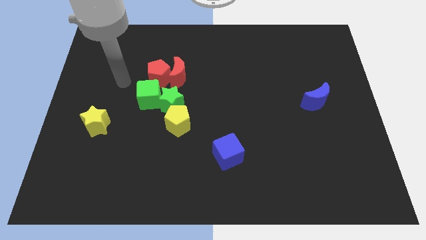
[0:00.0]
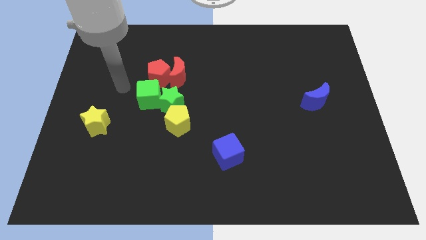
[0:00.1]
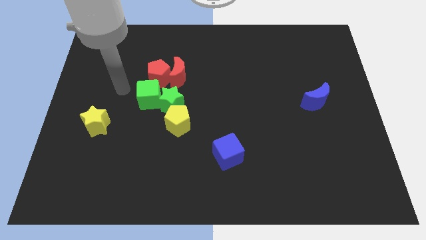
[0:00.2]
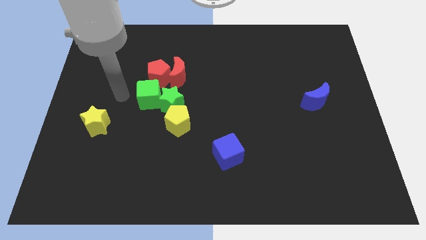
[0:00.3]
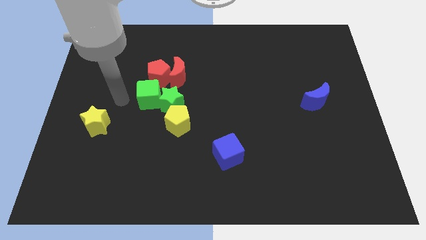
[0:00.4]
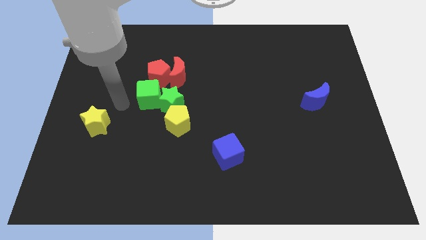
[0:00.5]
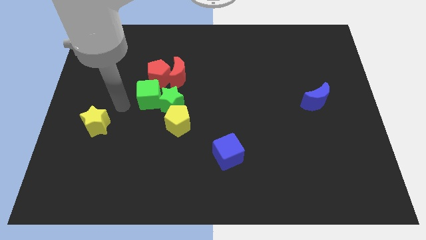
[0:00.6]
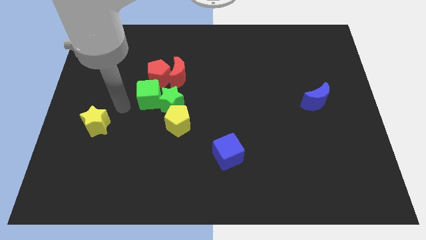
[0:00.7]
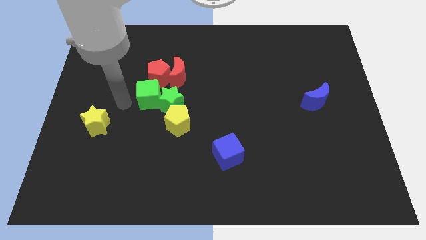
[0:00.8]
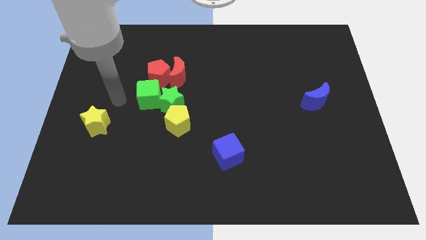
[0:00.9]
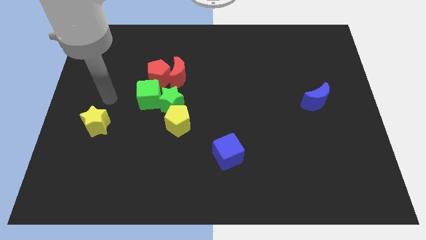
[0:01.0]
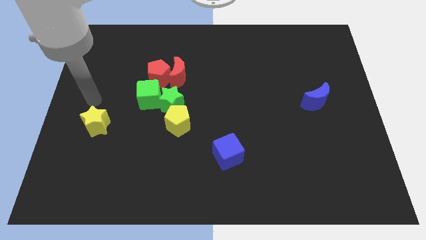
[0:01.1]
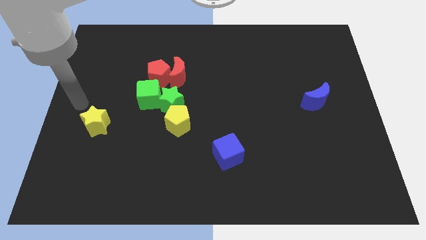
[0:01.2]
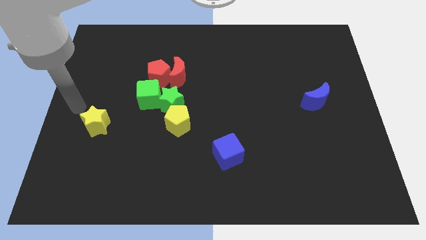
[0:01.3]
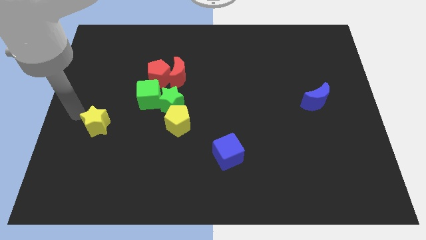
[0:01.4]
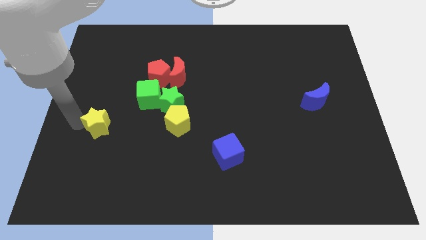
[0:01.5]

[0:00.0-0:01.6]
place your arm to the left of yellow star

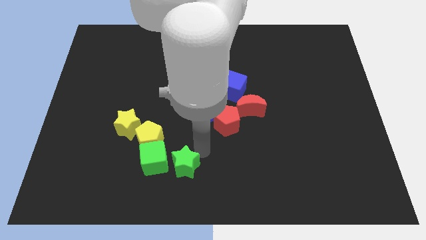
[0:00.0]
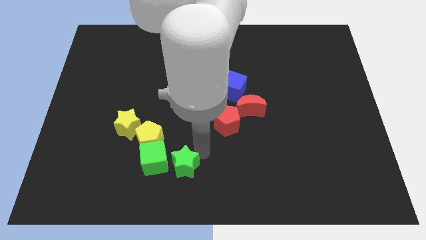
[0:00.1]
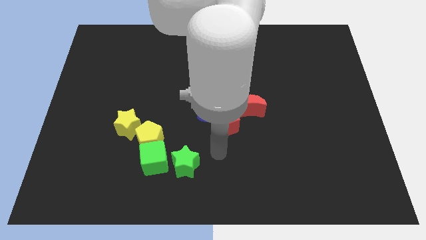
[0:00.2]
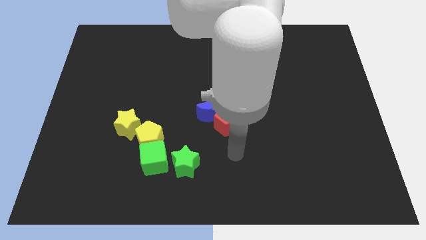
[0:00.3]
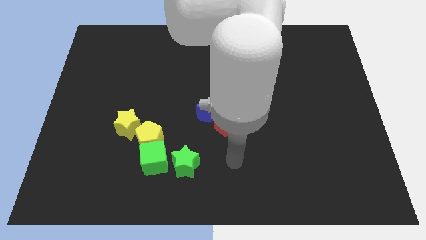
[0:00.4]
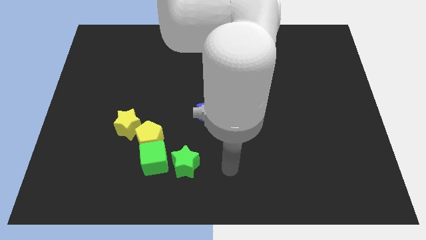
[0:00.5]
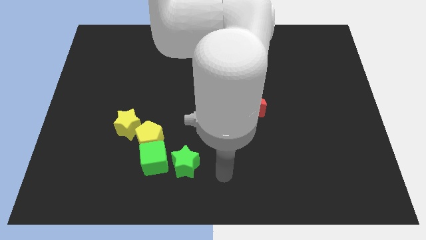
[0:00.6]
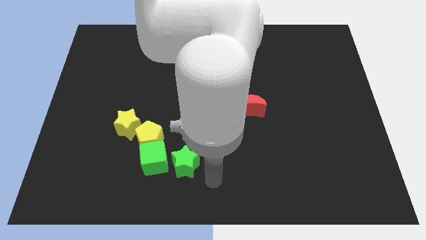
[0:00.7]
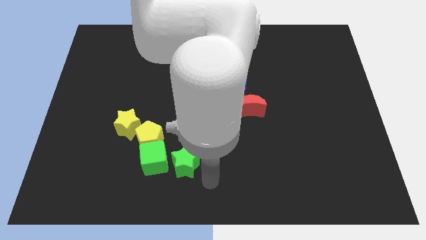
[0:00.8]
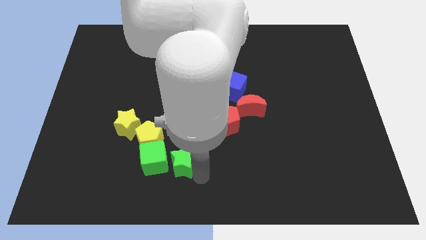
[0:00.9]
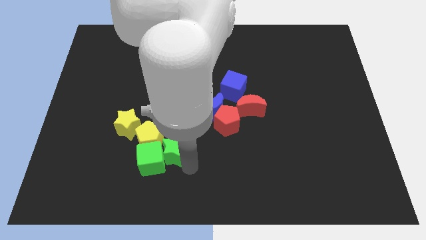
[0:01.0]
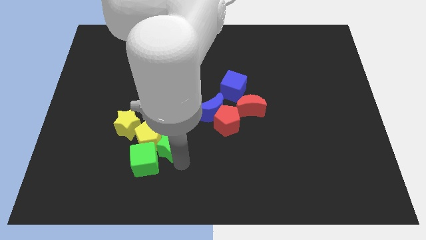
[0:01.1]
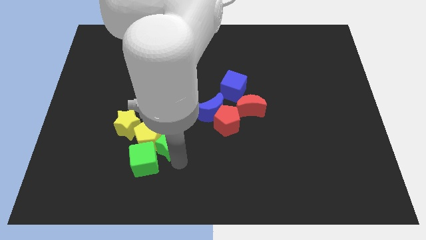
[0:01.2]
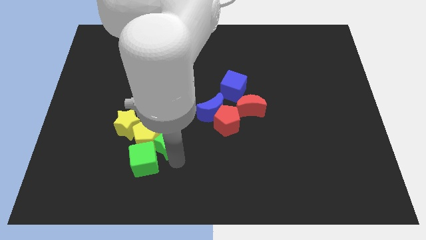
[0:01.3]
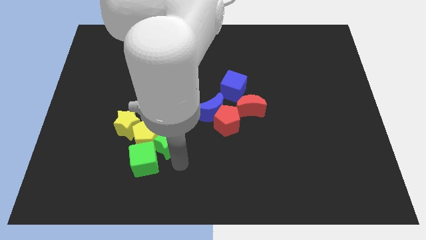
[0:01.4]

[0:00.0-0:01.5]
push the green star into the yellow pentagon

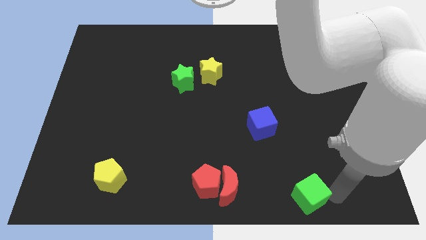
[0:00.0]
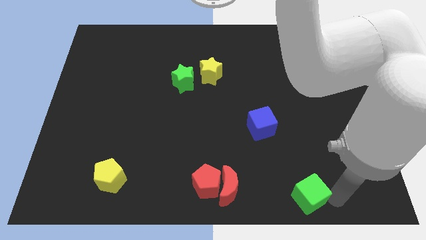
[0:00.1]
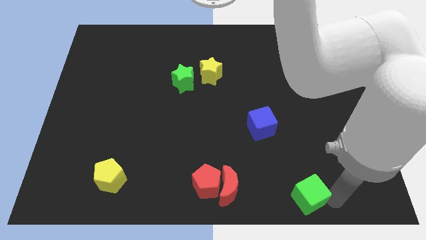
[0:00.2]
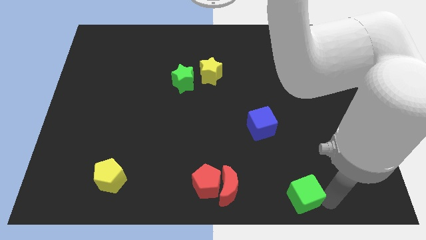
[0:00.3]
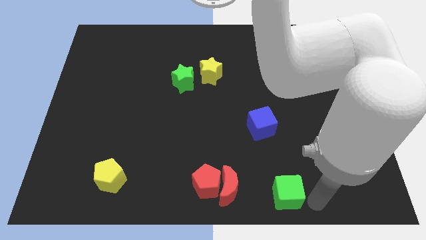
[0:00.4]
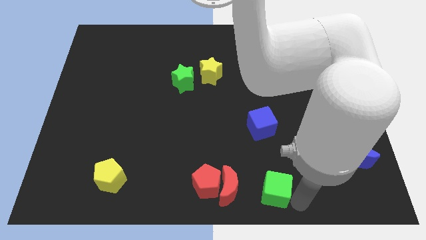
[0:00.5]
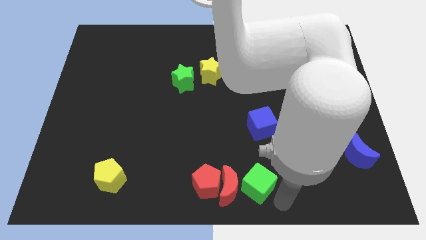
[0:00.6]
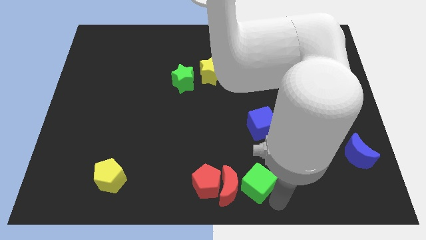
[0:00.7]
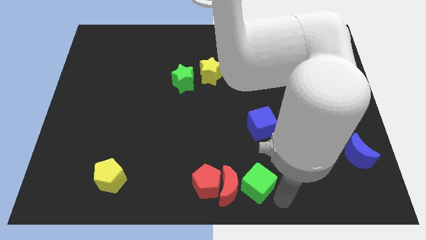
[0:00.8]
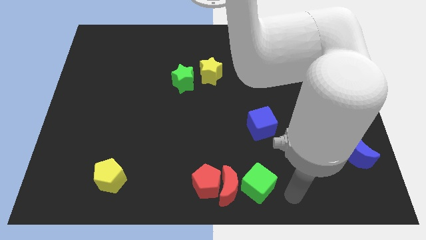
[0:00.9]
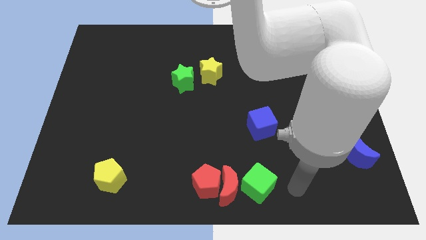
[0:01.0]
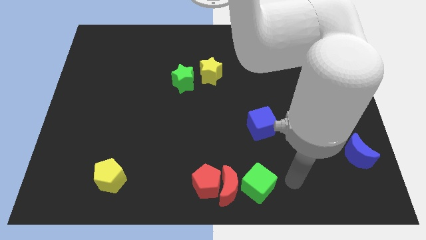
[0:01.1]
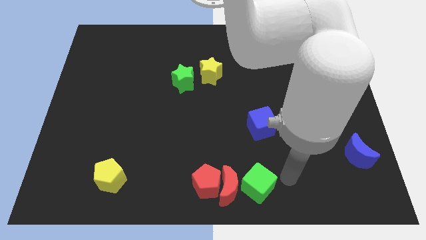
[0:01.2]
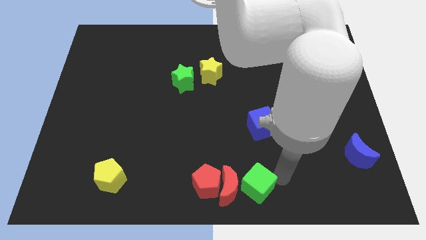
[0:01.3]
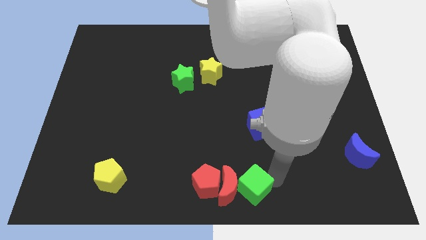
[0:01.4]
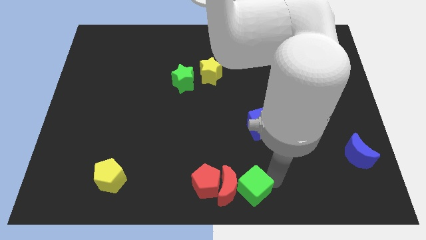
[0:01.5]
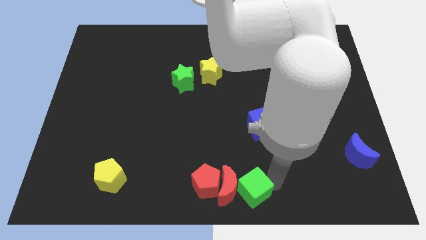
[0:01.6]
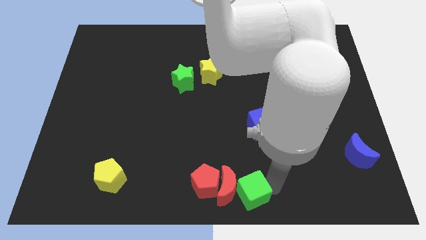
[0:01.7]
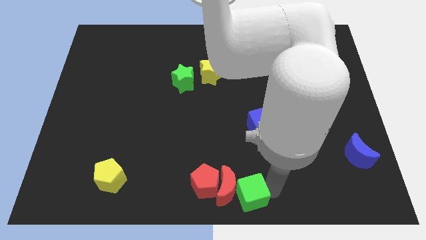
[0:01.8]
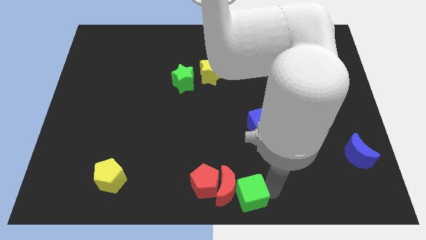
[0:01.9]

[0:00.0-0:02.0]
place the green cube beside red crescent

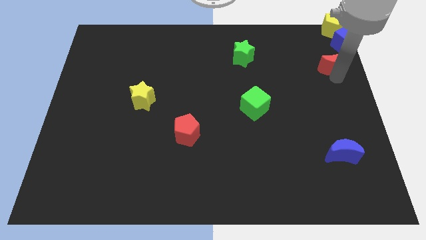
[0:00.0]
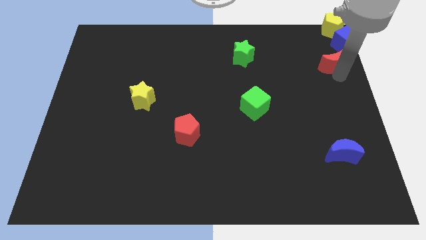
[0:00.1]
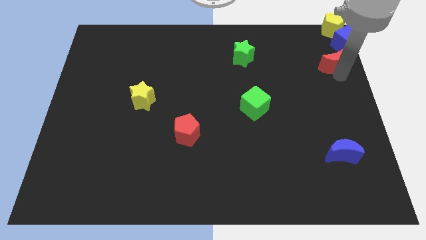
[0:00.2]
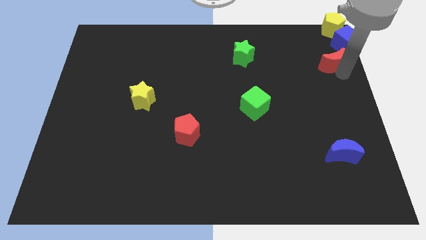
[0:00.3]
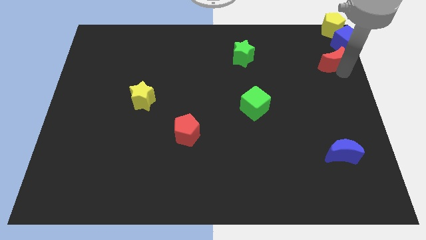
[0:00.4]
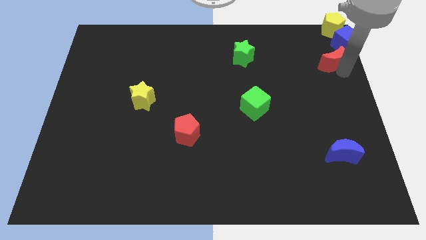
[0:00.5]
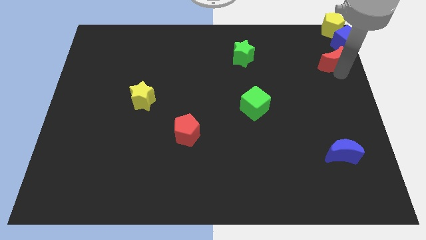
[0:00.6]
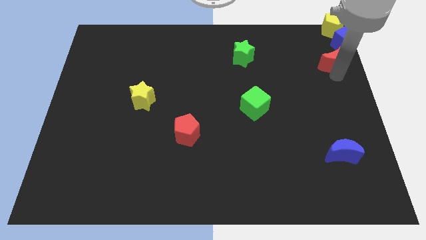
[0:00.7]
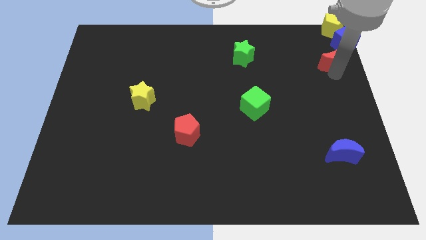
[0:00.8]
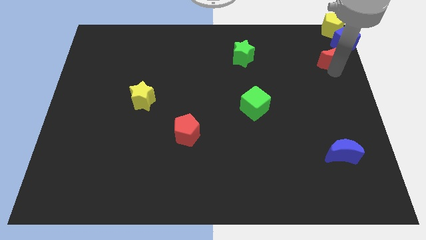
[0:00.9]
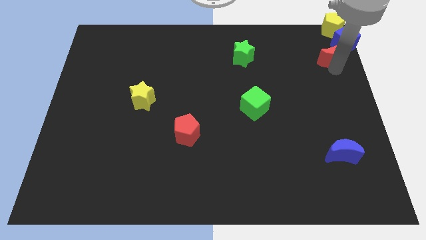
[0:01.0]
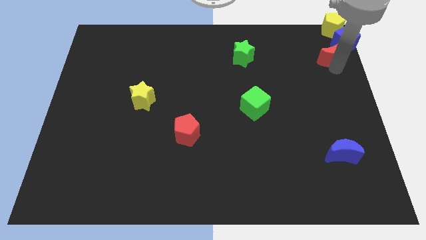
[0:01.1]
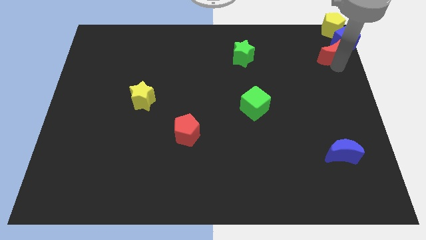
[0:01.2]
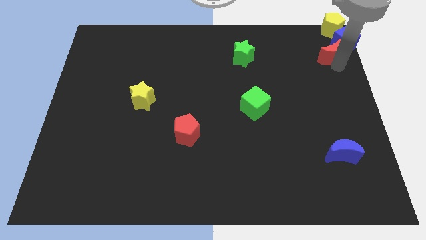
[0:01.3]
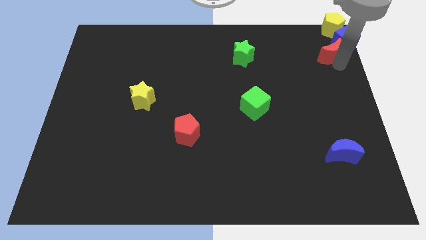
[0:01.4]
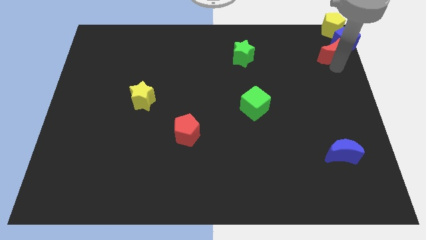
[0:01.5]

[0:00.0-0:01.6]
push the red crescent into the blue cube

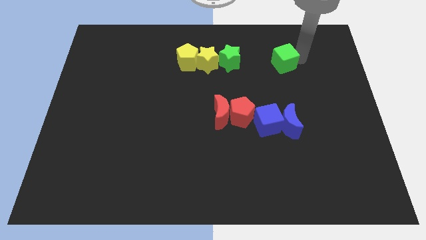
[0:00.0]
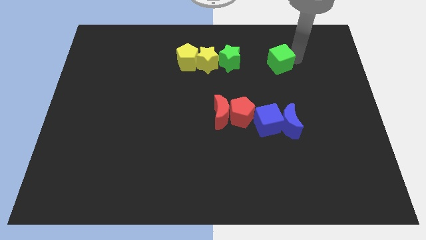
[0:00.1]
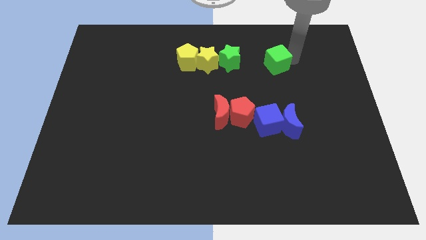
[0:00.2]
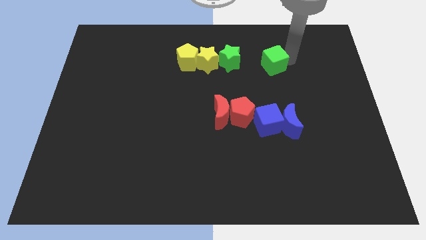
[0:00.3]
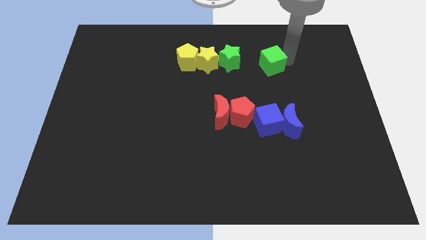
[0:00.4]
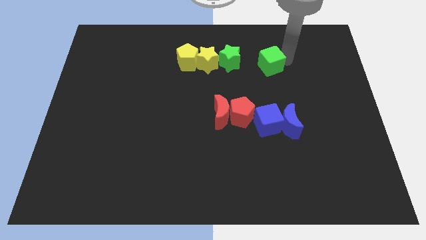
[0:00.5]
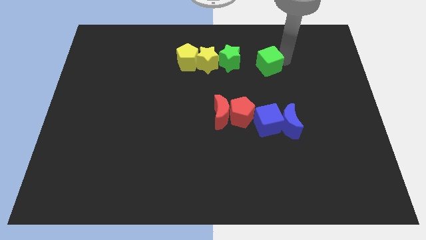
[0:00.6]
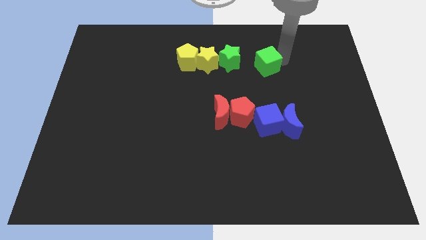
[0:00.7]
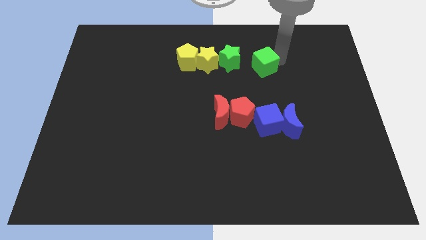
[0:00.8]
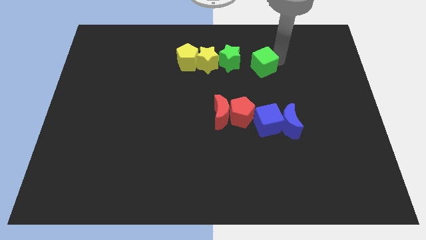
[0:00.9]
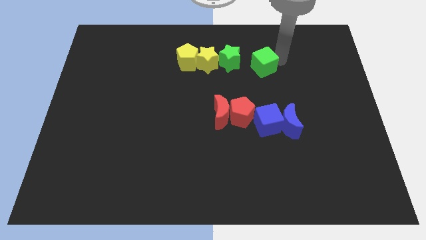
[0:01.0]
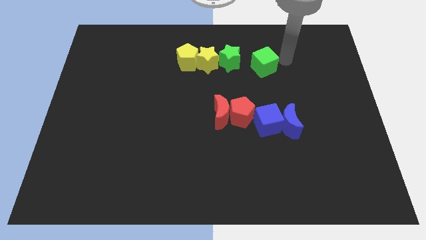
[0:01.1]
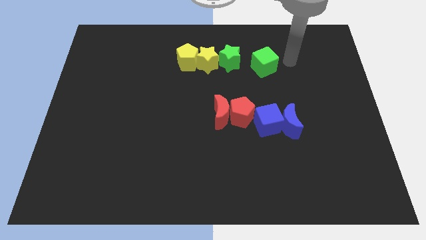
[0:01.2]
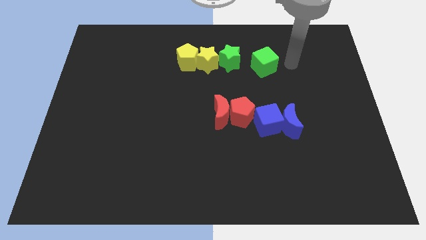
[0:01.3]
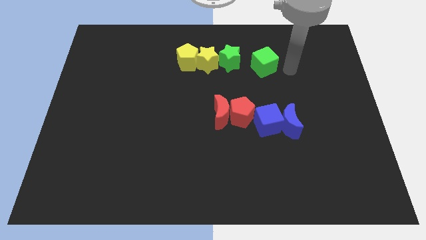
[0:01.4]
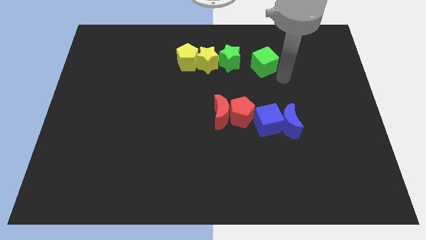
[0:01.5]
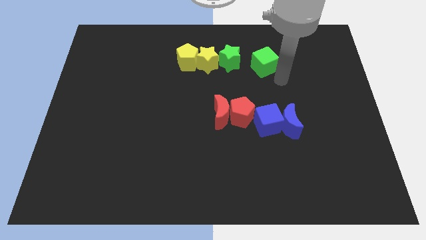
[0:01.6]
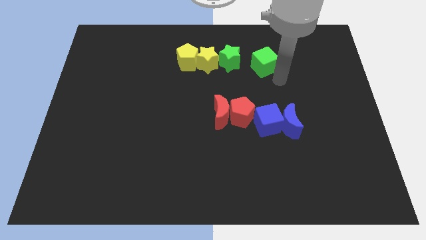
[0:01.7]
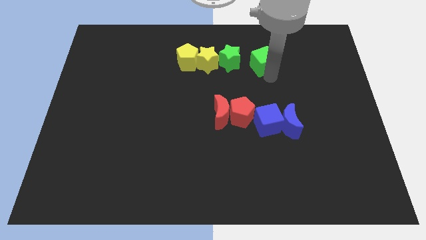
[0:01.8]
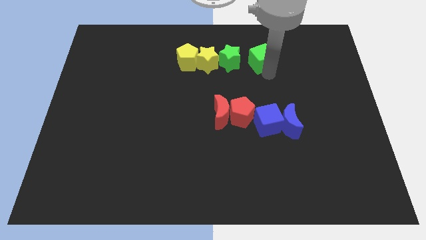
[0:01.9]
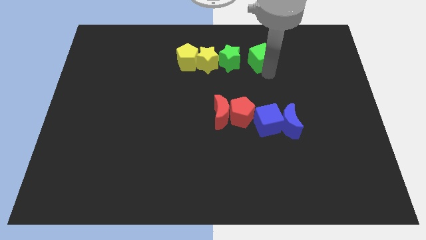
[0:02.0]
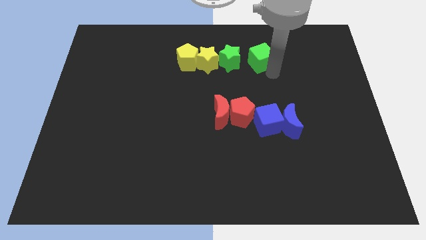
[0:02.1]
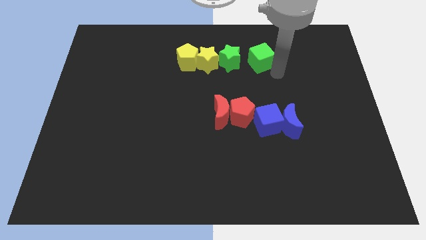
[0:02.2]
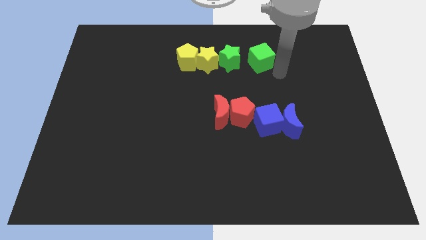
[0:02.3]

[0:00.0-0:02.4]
move the green cube to the left of the green star
